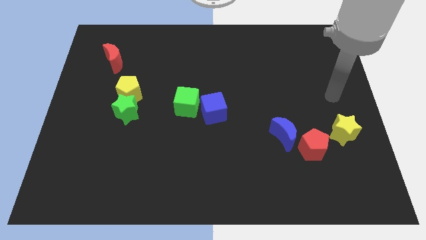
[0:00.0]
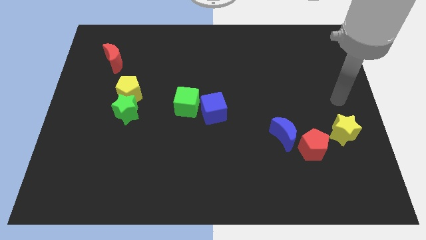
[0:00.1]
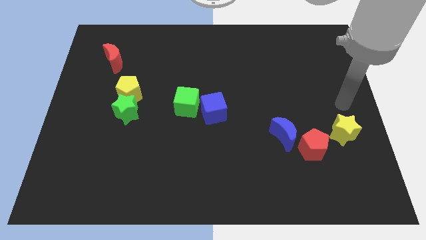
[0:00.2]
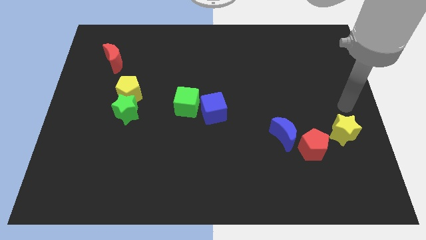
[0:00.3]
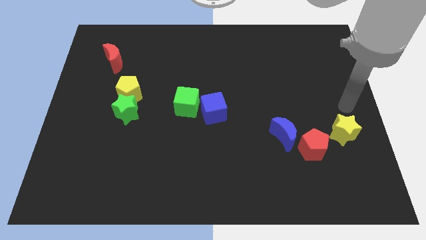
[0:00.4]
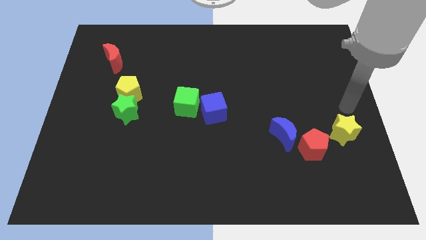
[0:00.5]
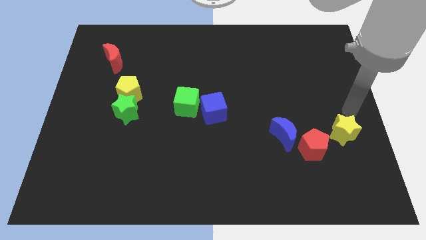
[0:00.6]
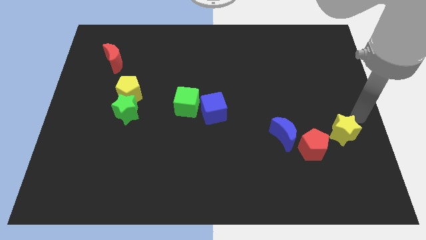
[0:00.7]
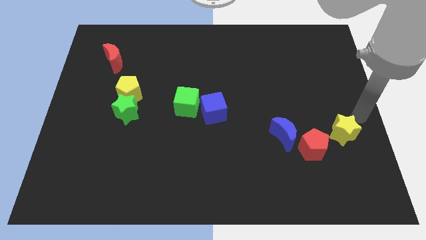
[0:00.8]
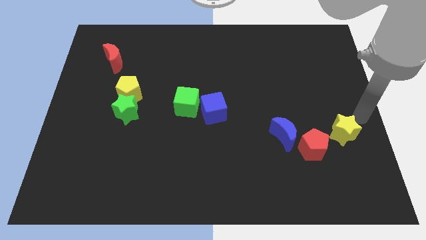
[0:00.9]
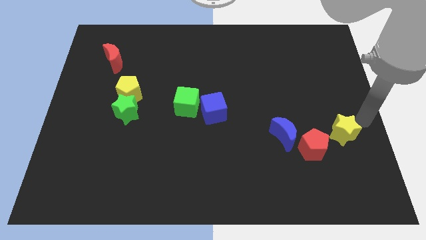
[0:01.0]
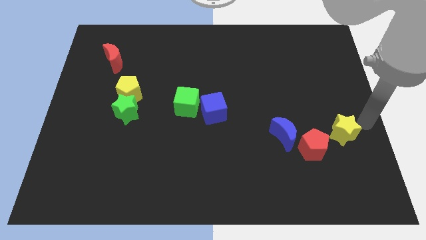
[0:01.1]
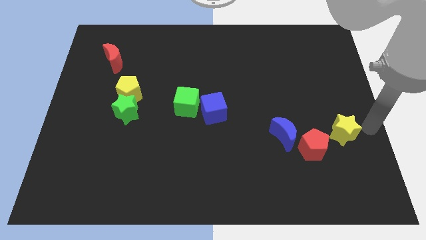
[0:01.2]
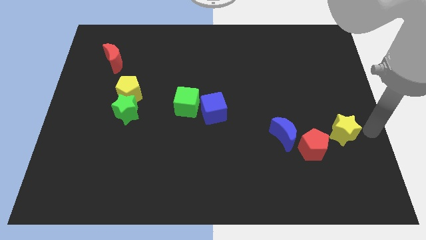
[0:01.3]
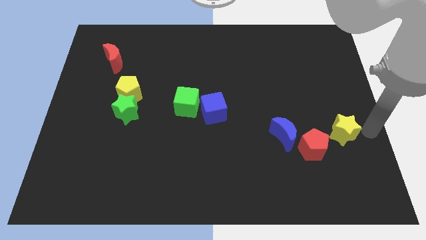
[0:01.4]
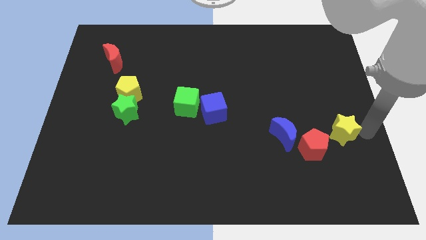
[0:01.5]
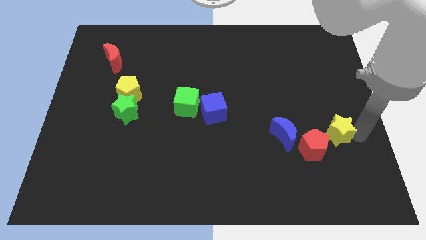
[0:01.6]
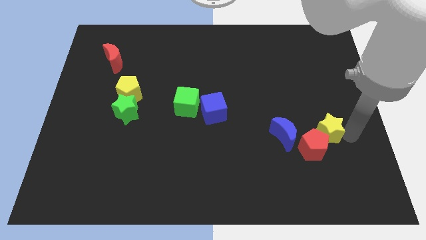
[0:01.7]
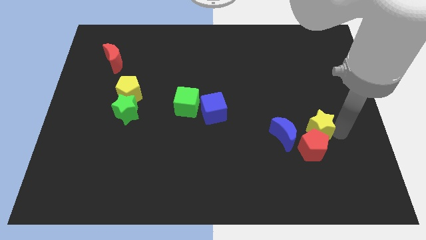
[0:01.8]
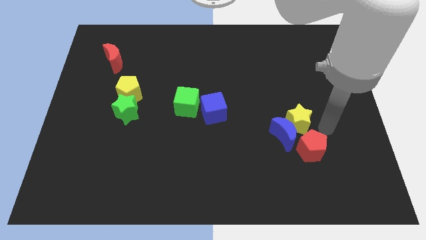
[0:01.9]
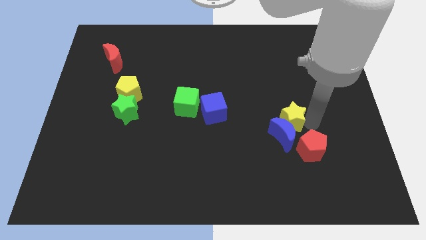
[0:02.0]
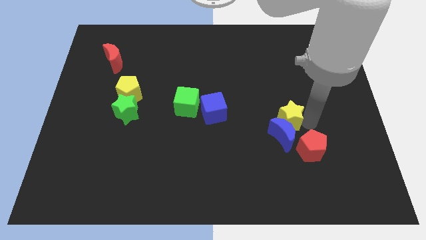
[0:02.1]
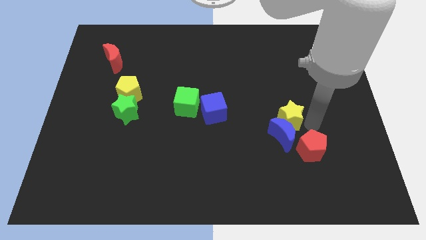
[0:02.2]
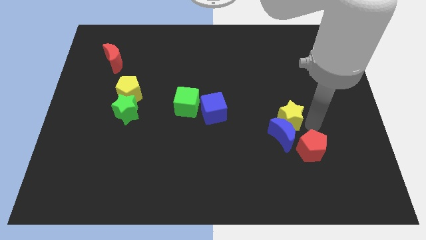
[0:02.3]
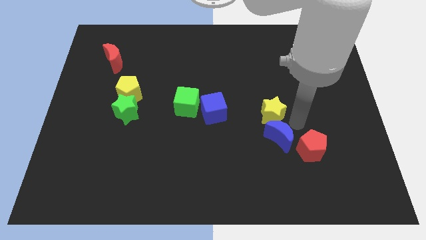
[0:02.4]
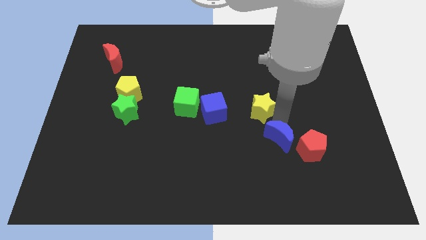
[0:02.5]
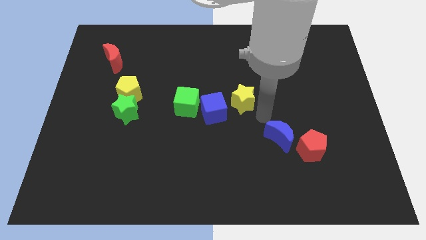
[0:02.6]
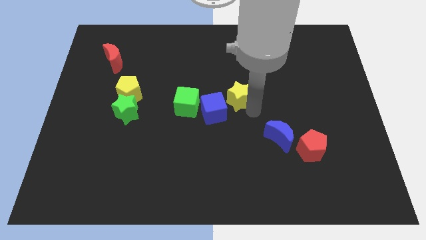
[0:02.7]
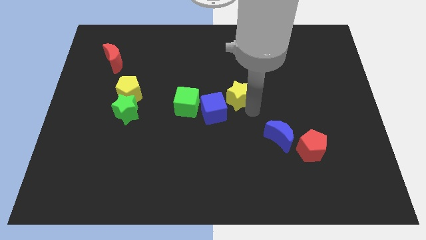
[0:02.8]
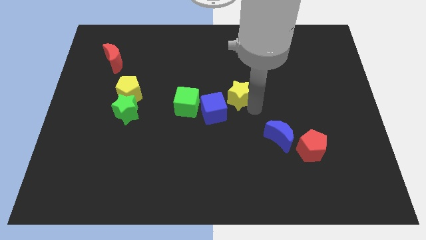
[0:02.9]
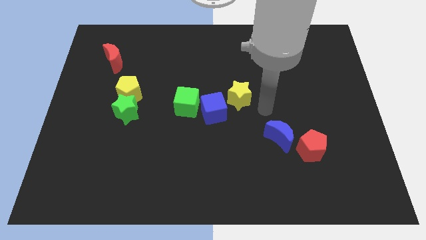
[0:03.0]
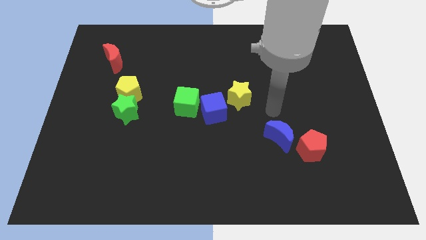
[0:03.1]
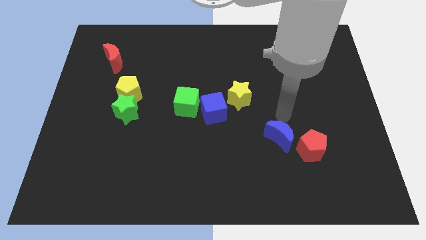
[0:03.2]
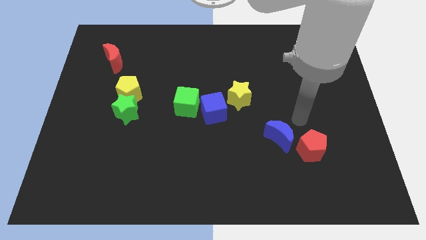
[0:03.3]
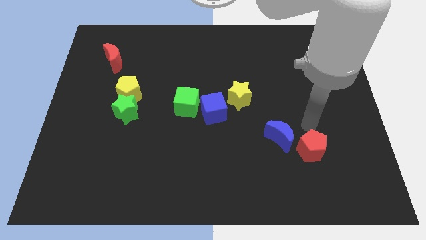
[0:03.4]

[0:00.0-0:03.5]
move the yellow star to the top right side of the blue square

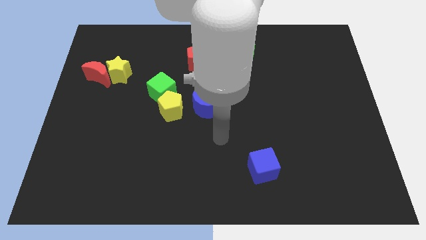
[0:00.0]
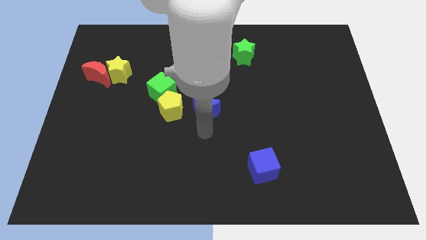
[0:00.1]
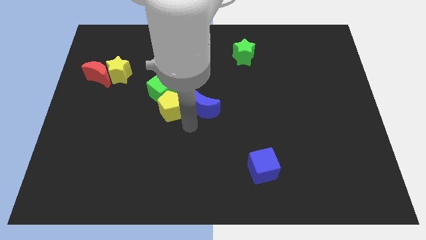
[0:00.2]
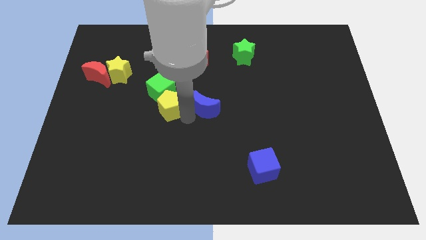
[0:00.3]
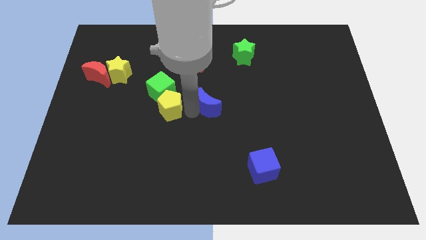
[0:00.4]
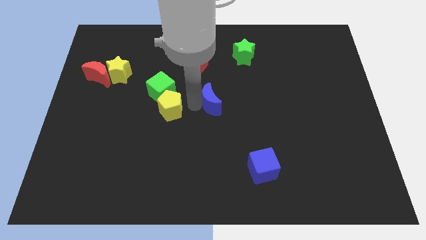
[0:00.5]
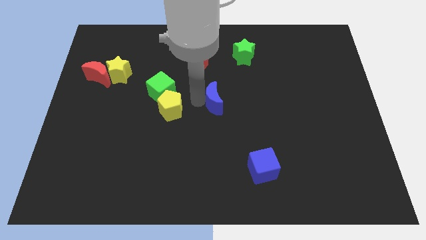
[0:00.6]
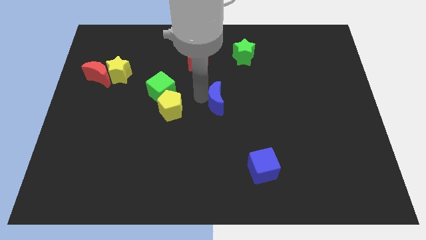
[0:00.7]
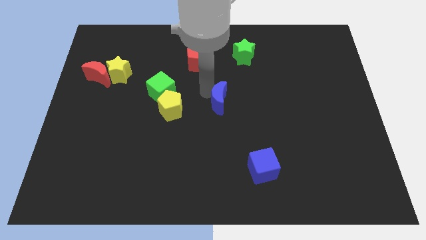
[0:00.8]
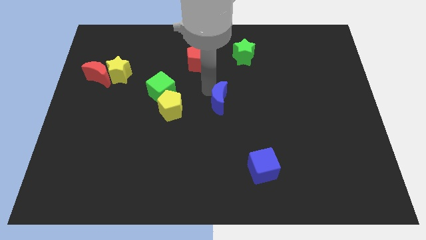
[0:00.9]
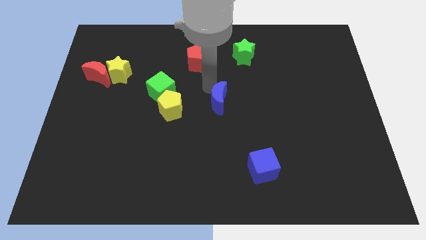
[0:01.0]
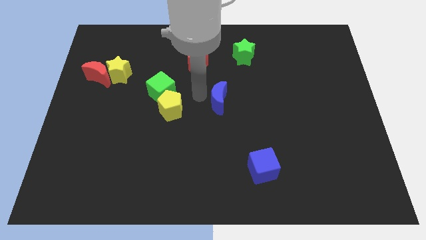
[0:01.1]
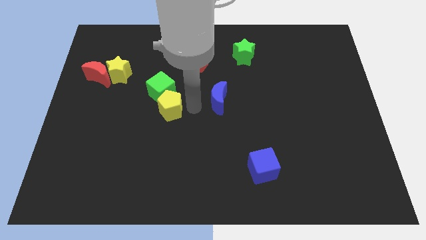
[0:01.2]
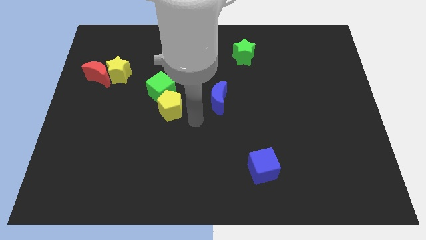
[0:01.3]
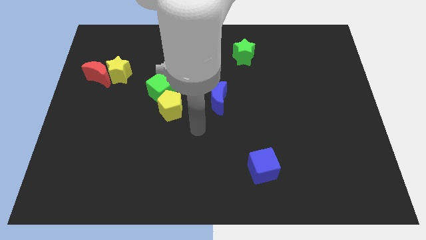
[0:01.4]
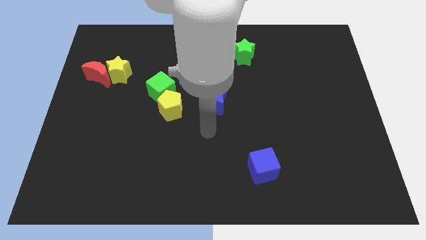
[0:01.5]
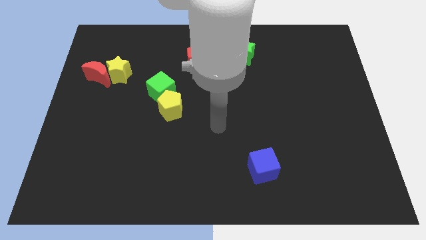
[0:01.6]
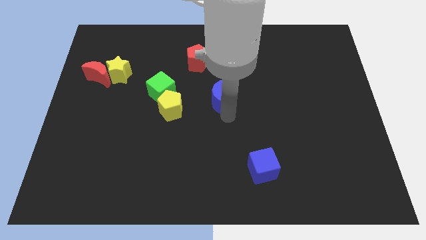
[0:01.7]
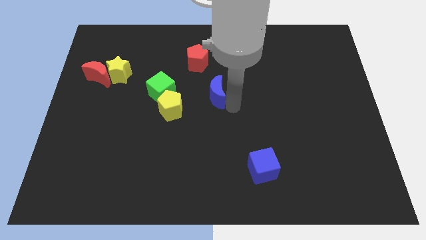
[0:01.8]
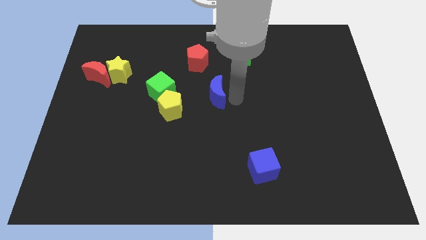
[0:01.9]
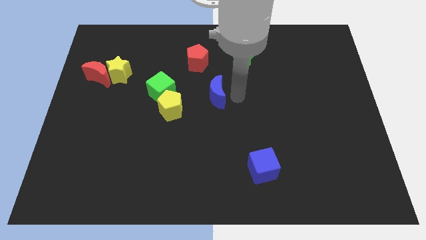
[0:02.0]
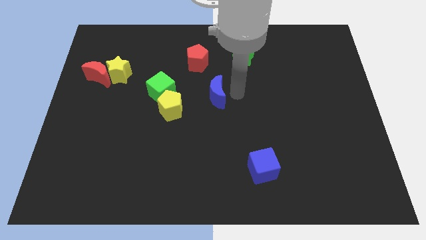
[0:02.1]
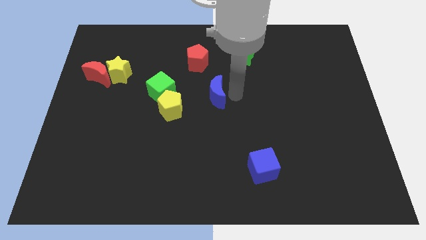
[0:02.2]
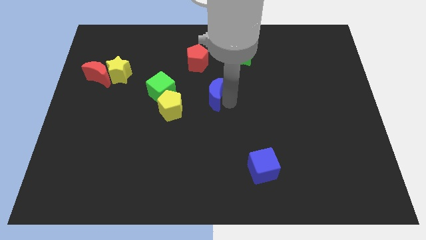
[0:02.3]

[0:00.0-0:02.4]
slide the blue moon

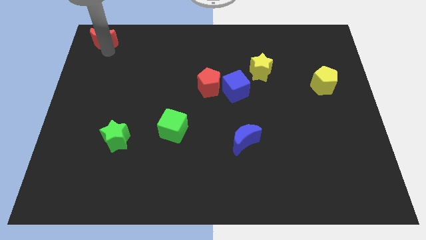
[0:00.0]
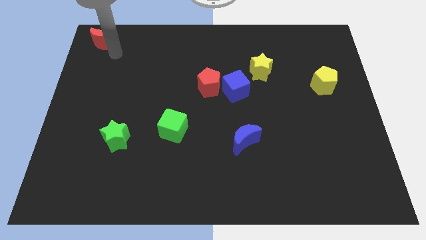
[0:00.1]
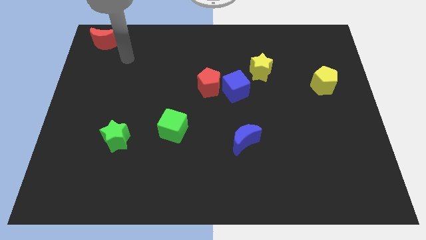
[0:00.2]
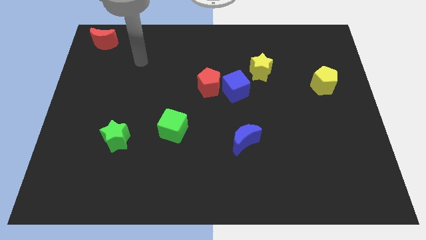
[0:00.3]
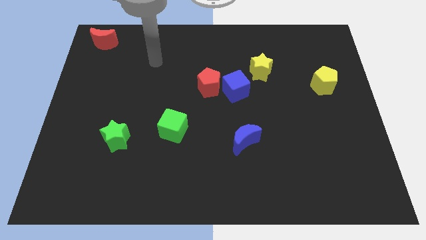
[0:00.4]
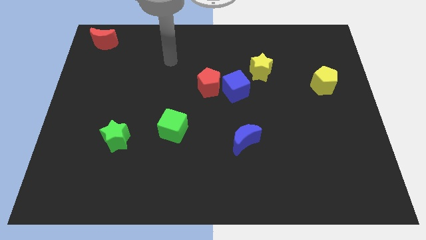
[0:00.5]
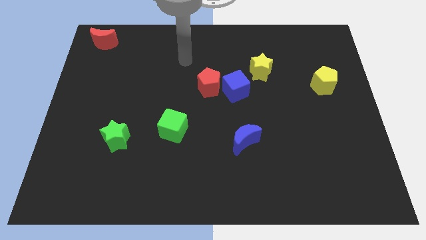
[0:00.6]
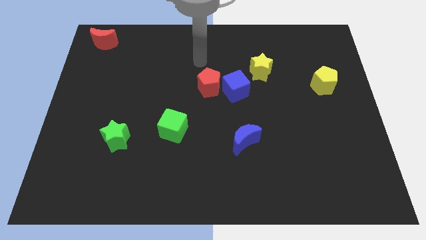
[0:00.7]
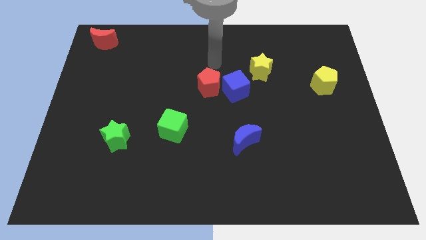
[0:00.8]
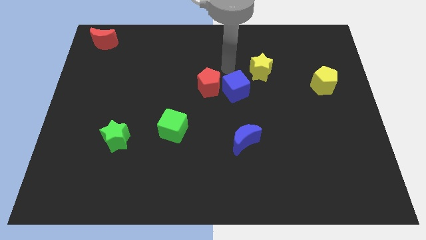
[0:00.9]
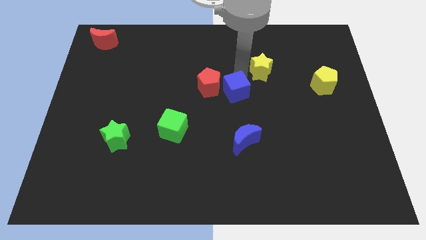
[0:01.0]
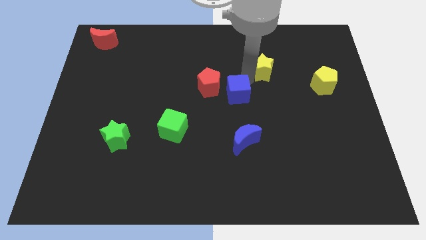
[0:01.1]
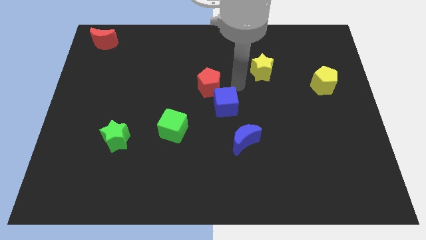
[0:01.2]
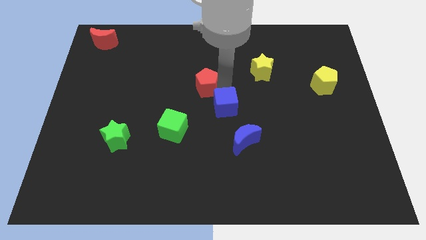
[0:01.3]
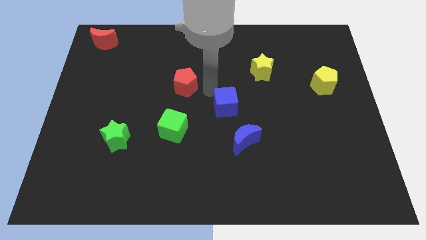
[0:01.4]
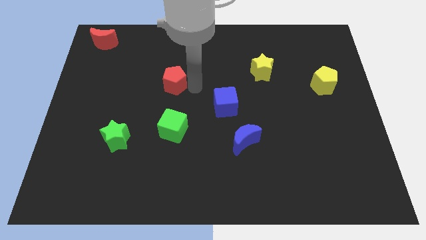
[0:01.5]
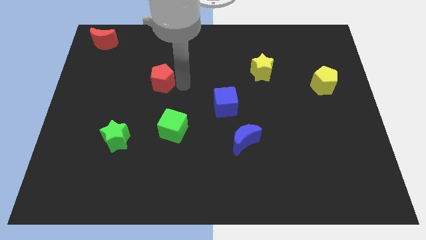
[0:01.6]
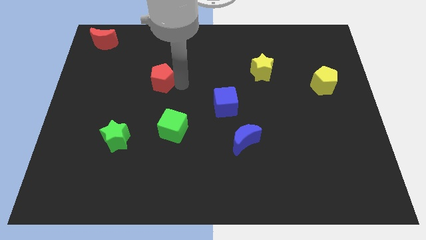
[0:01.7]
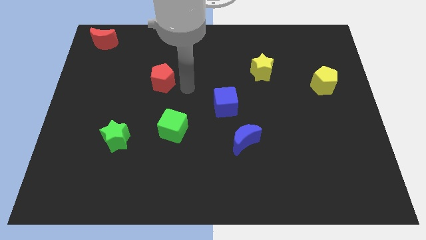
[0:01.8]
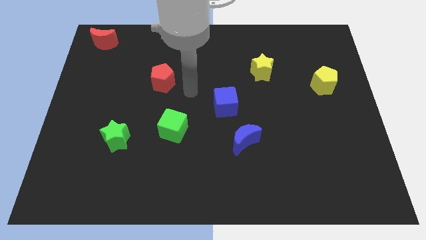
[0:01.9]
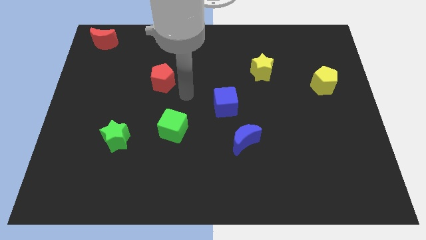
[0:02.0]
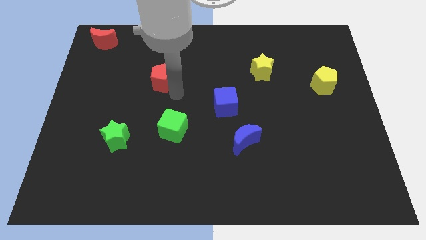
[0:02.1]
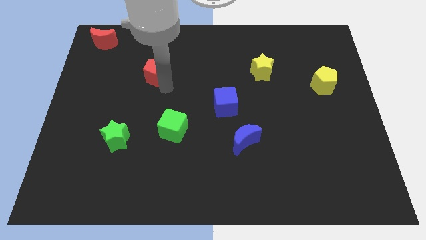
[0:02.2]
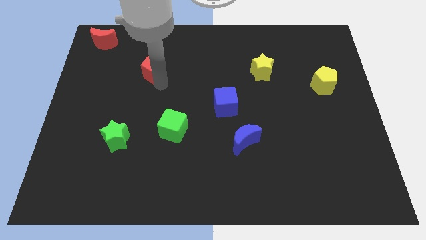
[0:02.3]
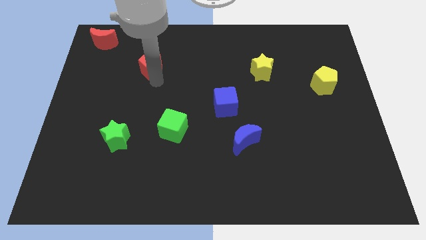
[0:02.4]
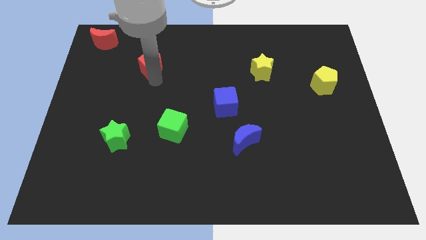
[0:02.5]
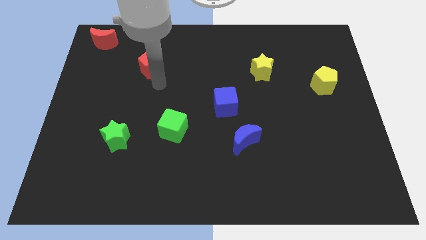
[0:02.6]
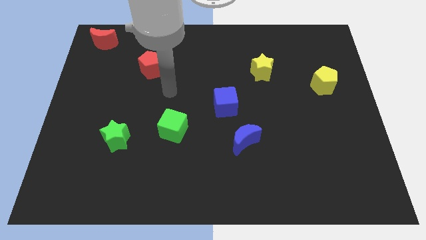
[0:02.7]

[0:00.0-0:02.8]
push the red pentagon to the bottom right of the red crescent

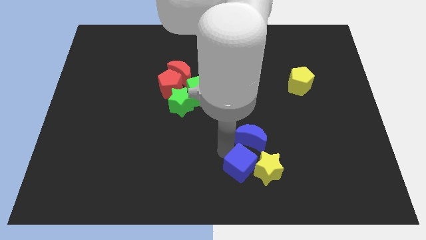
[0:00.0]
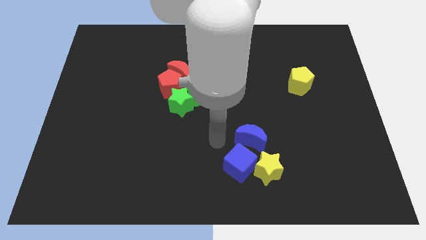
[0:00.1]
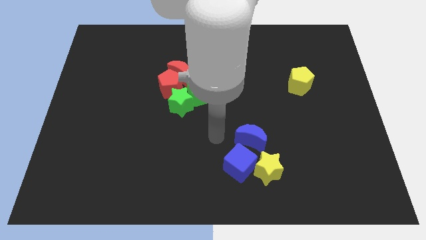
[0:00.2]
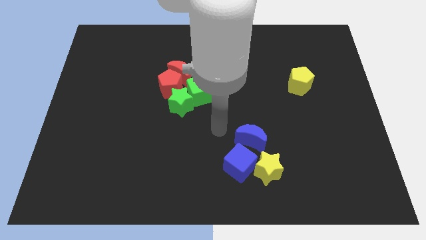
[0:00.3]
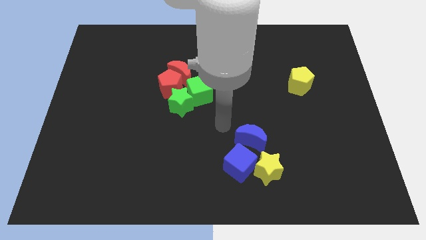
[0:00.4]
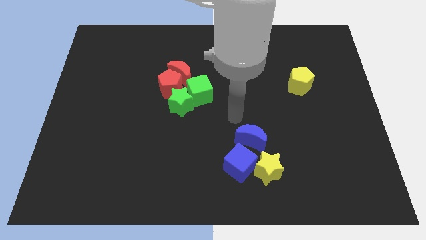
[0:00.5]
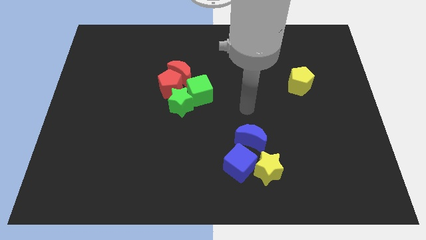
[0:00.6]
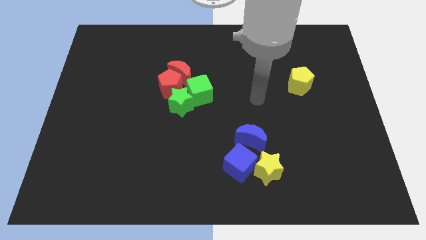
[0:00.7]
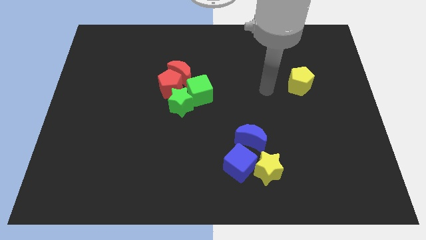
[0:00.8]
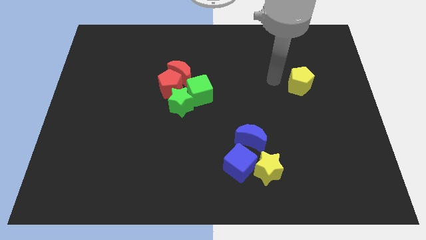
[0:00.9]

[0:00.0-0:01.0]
move your arm to the left side of the yellow pentagon
